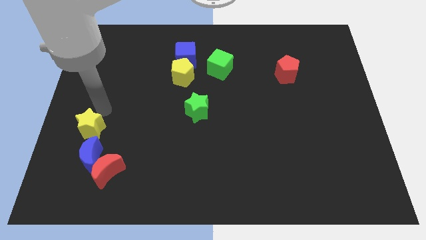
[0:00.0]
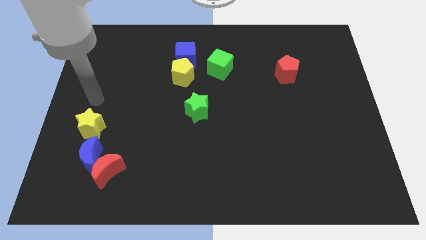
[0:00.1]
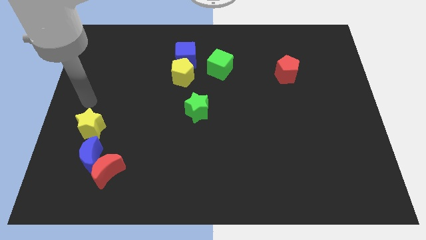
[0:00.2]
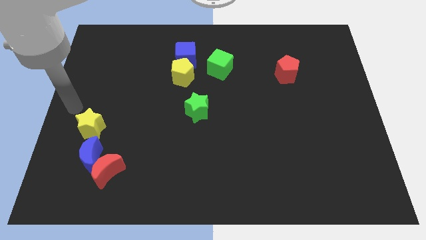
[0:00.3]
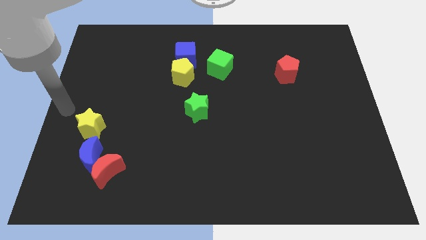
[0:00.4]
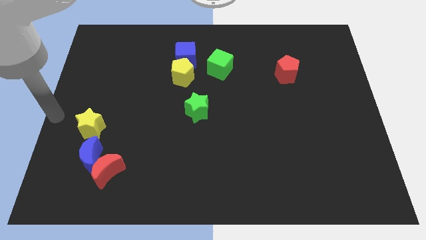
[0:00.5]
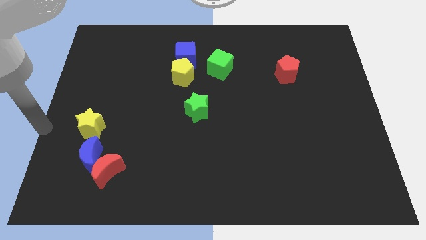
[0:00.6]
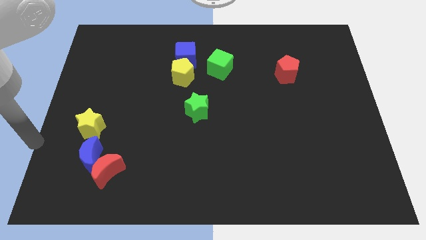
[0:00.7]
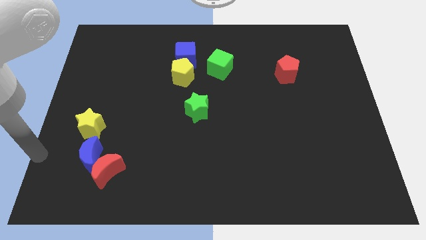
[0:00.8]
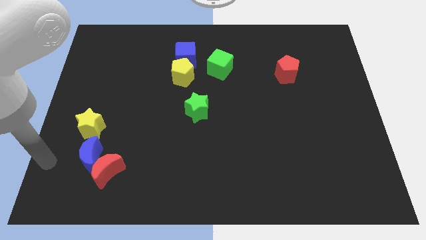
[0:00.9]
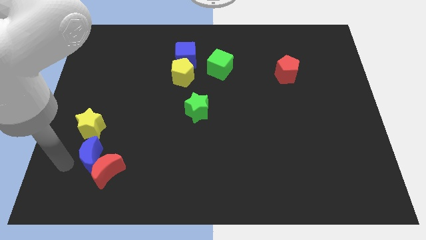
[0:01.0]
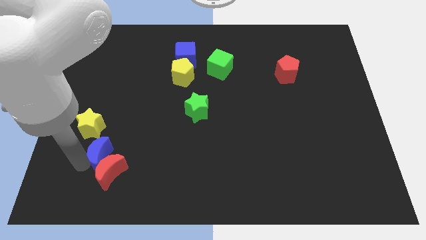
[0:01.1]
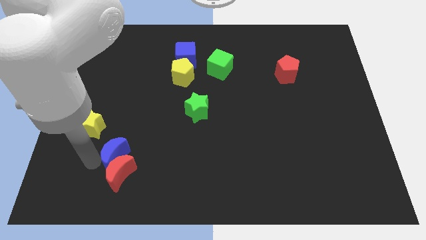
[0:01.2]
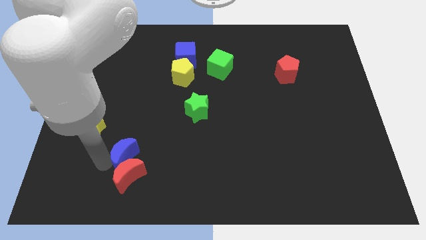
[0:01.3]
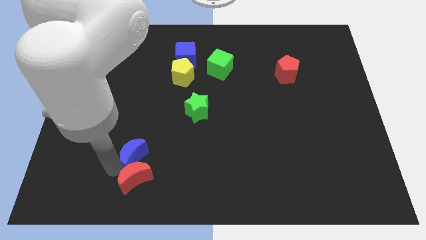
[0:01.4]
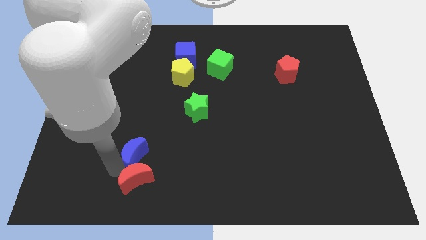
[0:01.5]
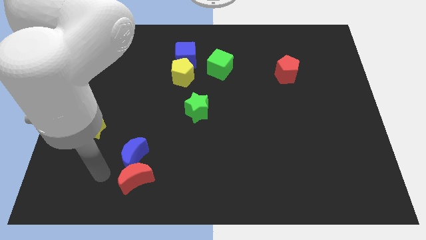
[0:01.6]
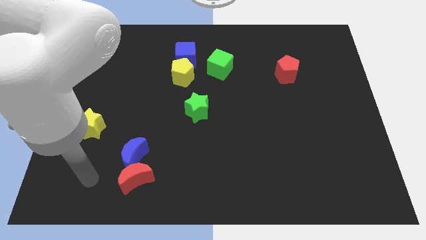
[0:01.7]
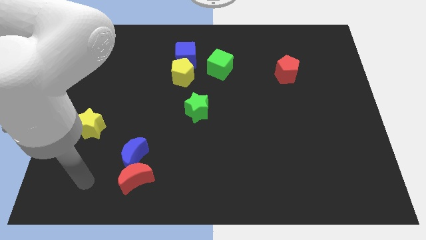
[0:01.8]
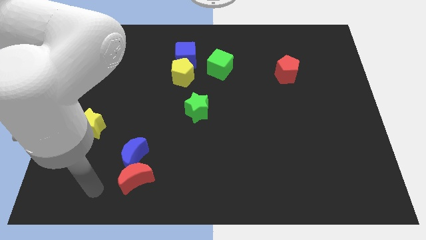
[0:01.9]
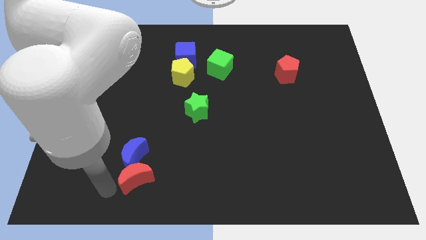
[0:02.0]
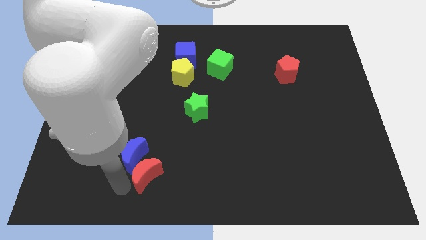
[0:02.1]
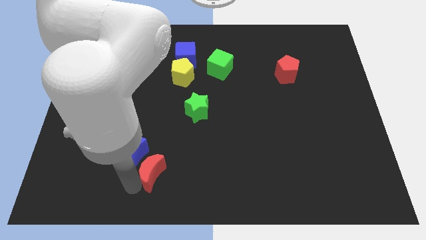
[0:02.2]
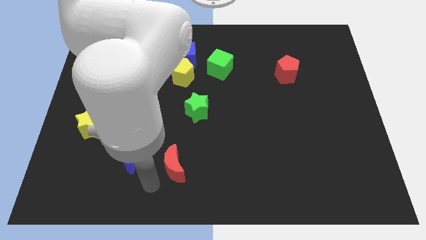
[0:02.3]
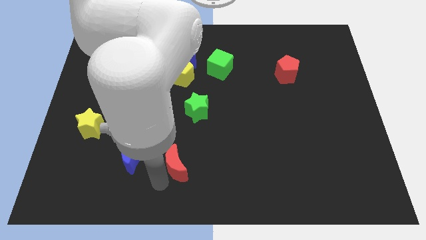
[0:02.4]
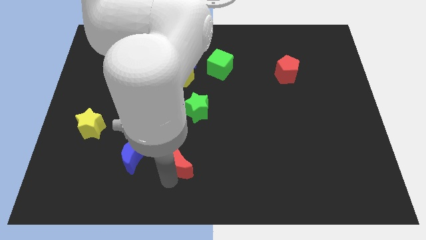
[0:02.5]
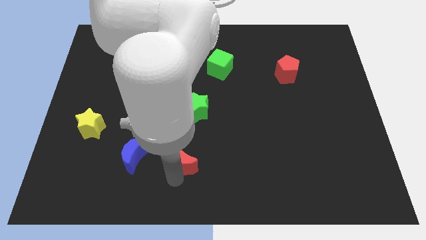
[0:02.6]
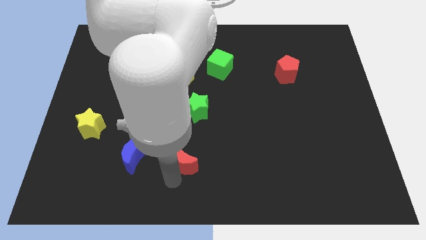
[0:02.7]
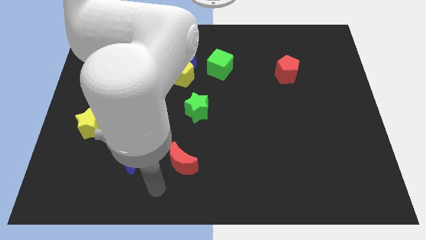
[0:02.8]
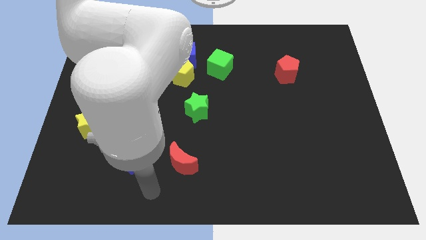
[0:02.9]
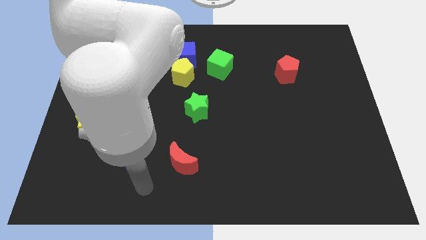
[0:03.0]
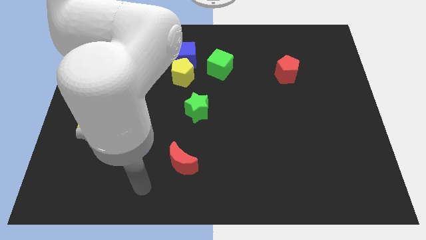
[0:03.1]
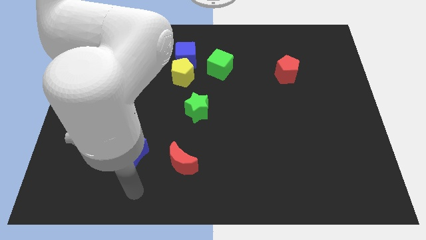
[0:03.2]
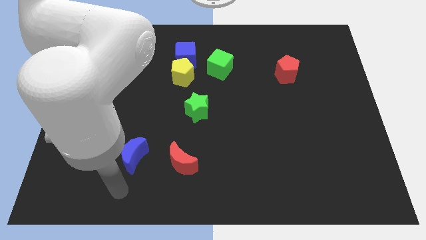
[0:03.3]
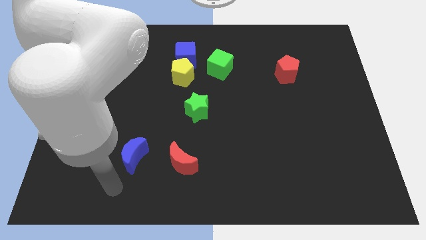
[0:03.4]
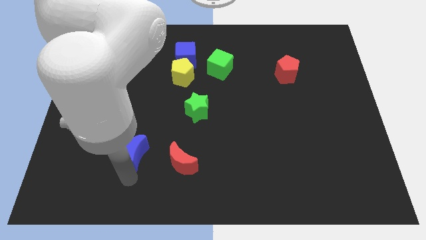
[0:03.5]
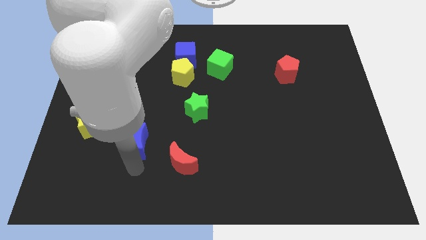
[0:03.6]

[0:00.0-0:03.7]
separate the blue moon and red moon from yellow star

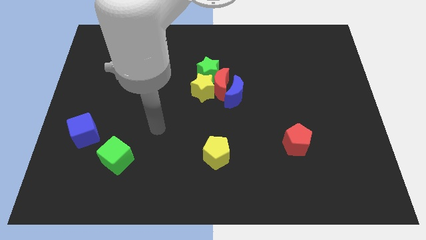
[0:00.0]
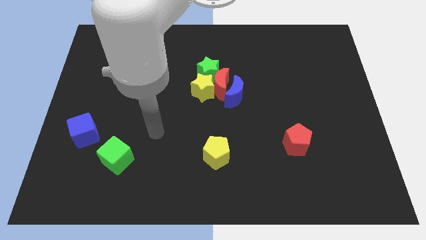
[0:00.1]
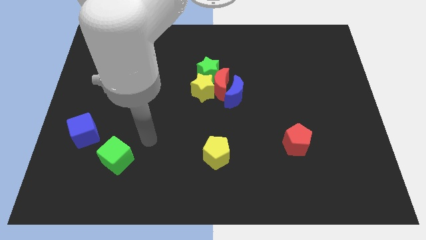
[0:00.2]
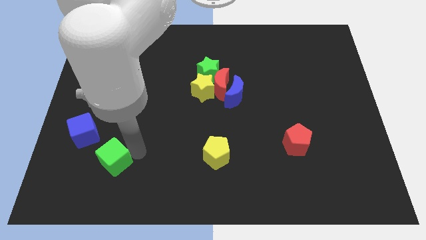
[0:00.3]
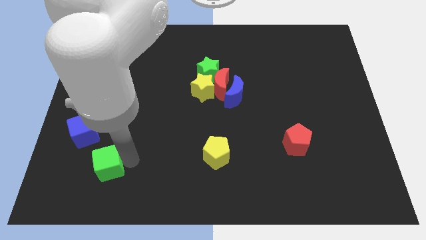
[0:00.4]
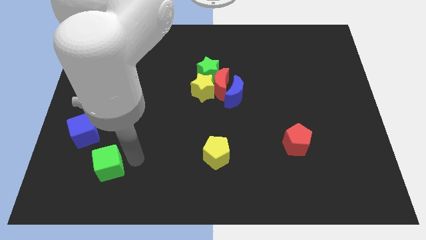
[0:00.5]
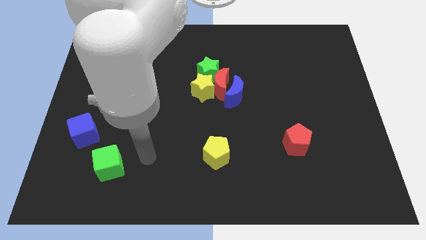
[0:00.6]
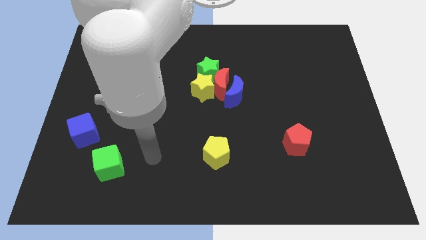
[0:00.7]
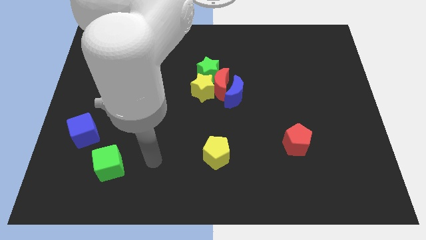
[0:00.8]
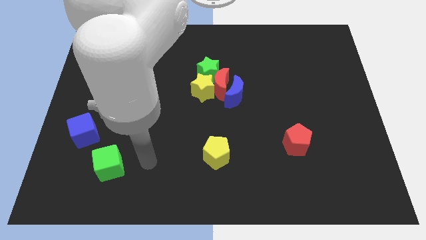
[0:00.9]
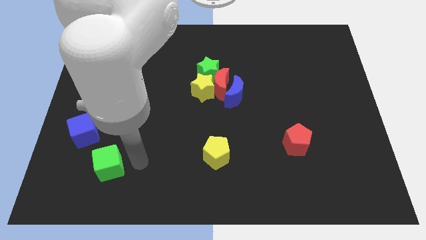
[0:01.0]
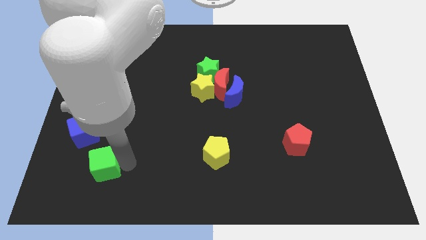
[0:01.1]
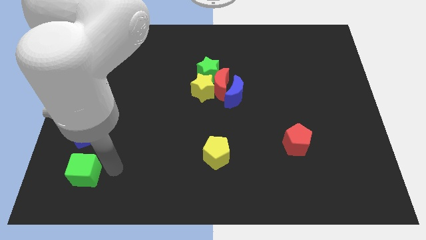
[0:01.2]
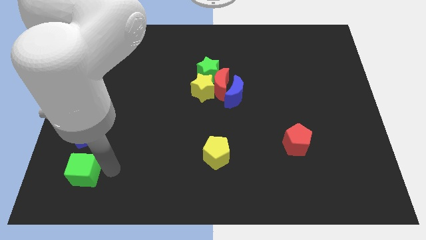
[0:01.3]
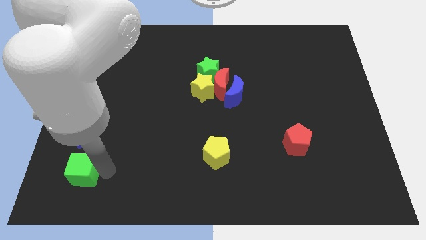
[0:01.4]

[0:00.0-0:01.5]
place green cube below blue cube

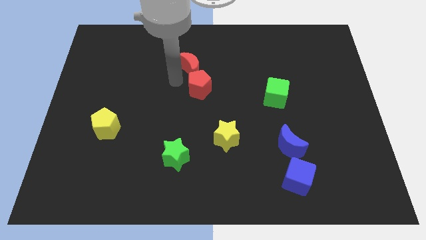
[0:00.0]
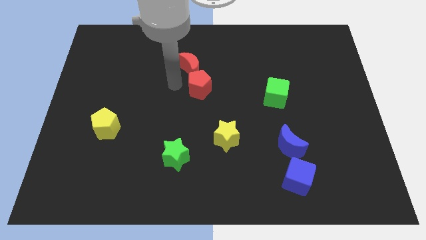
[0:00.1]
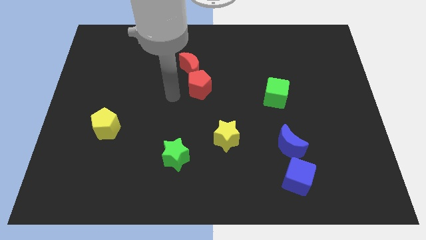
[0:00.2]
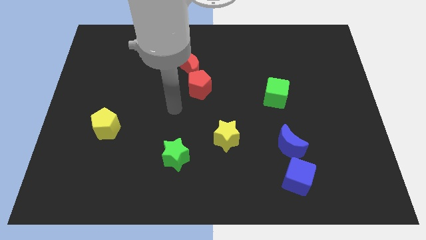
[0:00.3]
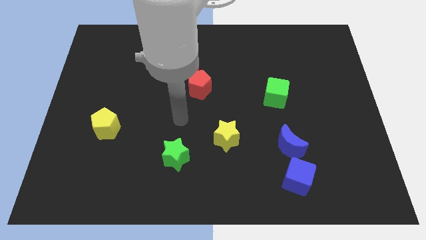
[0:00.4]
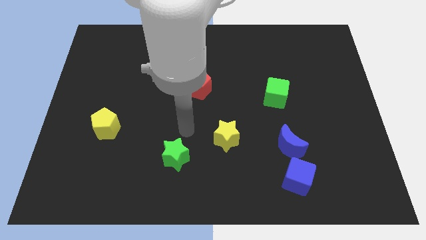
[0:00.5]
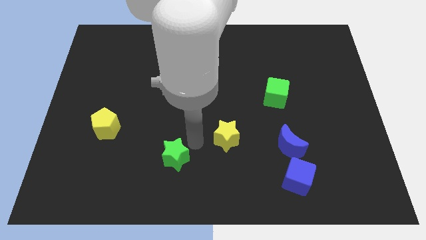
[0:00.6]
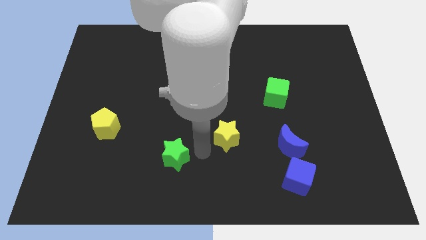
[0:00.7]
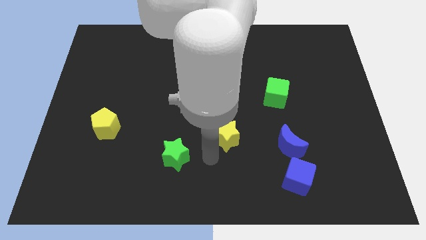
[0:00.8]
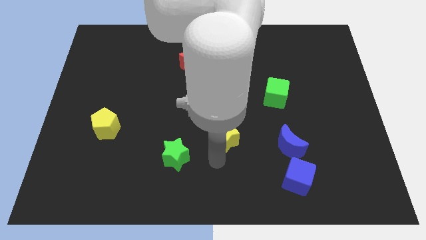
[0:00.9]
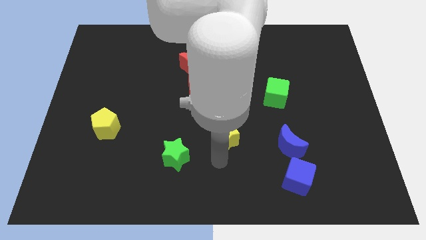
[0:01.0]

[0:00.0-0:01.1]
move your arm close to the yellow star

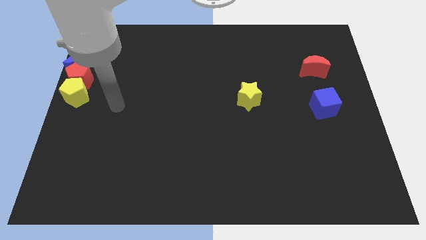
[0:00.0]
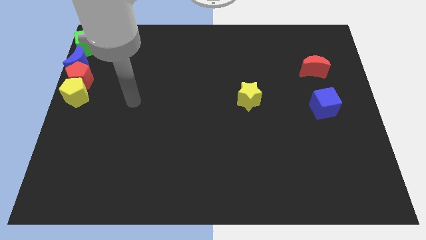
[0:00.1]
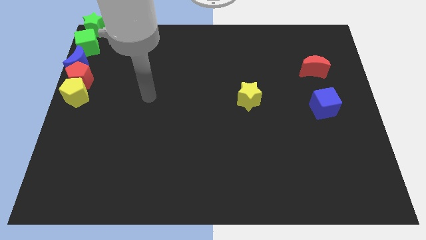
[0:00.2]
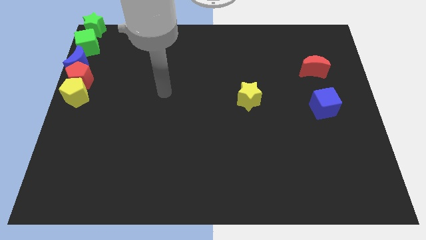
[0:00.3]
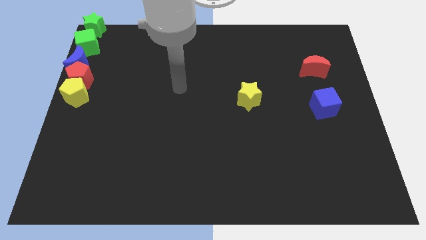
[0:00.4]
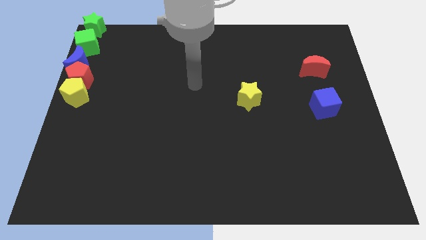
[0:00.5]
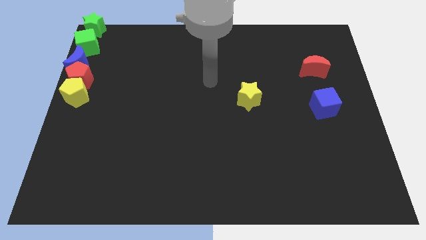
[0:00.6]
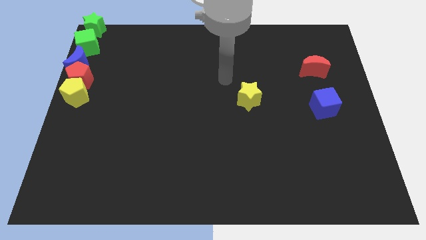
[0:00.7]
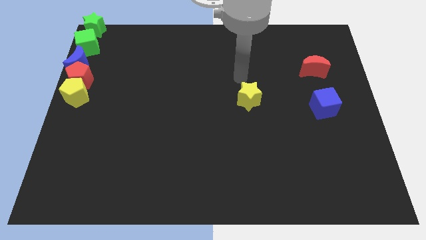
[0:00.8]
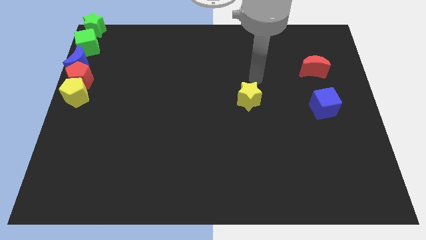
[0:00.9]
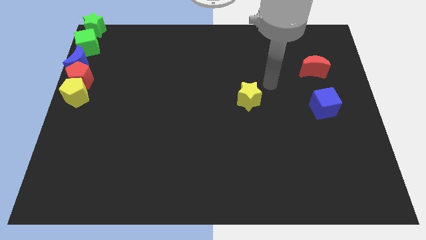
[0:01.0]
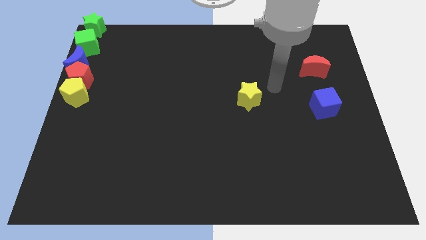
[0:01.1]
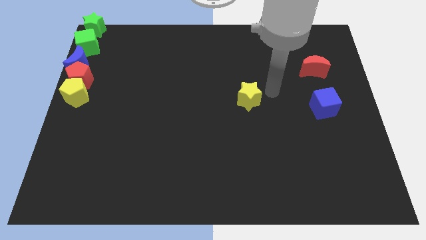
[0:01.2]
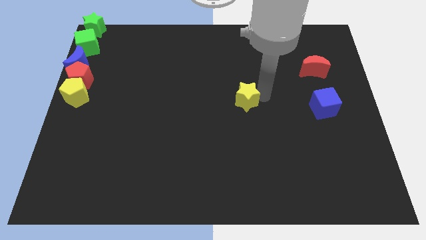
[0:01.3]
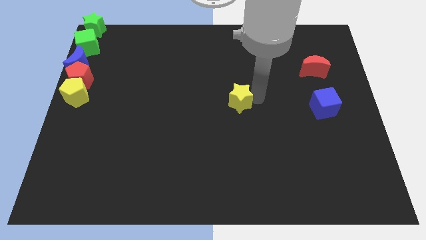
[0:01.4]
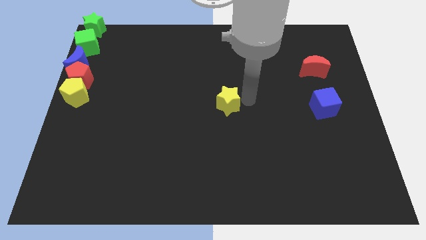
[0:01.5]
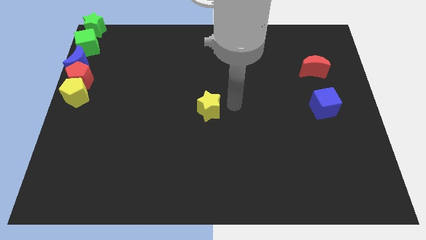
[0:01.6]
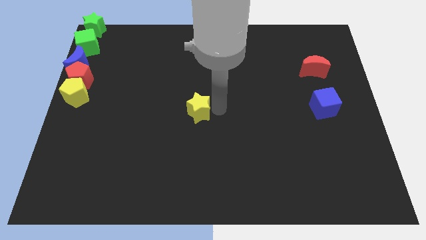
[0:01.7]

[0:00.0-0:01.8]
place the yellow star at center of the board

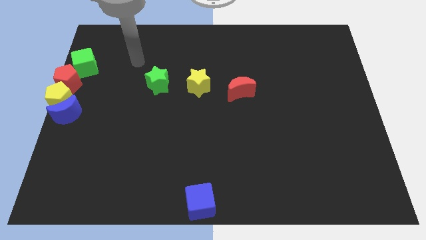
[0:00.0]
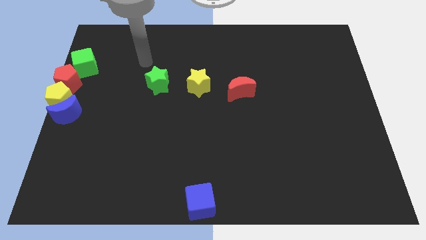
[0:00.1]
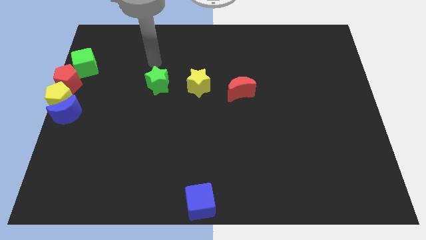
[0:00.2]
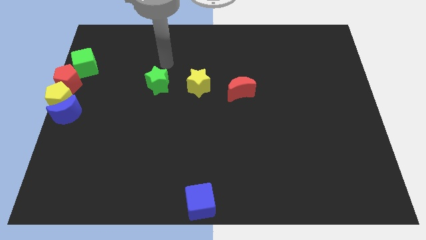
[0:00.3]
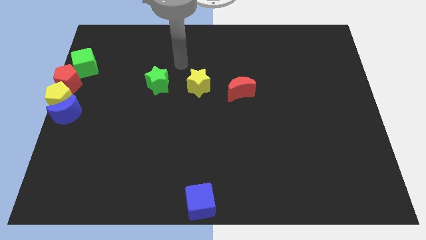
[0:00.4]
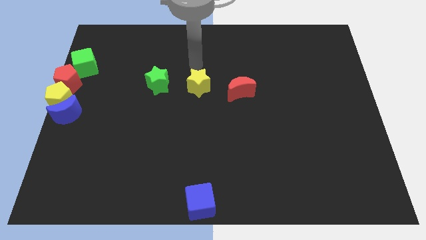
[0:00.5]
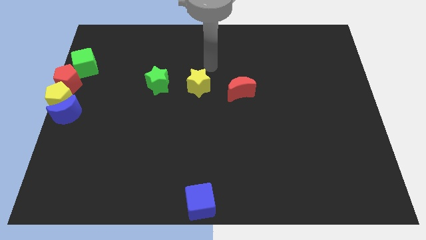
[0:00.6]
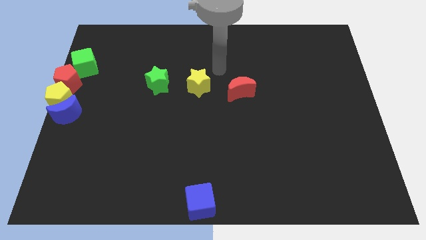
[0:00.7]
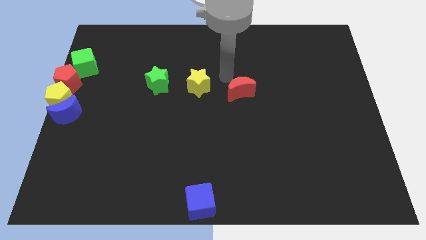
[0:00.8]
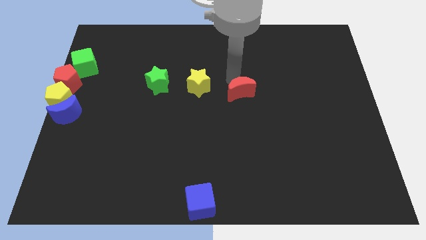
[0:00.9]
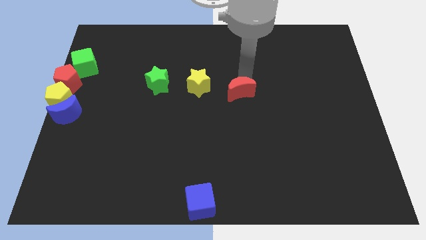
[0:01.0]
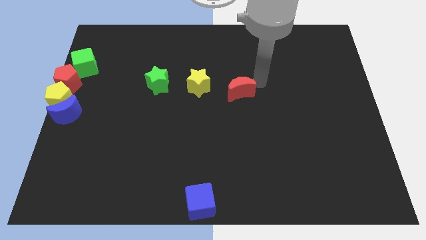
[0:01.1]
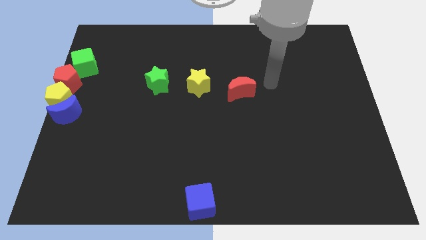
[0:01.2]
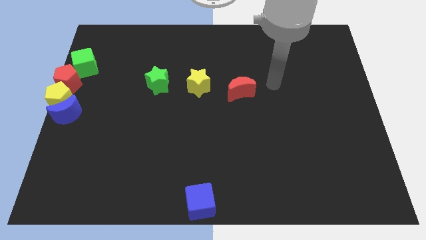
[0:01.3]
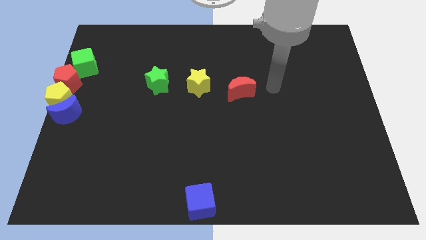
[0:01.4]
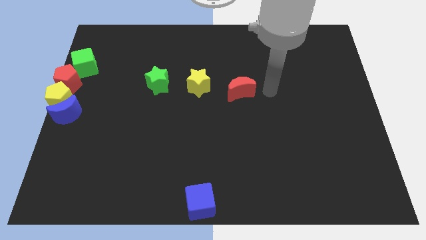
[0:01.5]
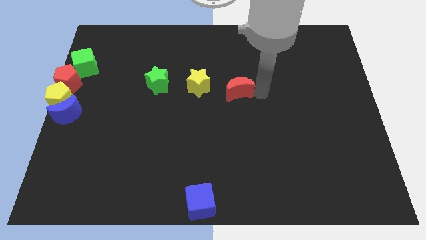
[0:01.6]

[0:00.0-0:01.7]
place the arm right to the red moon
